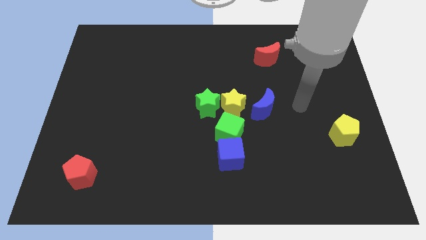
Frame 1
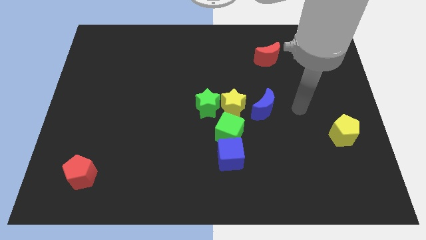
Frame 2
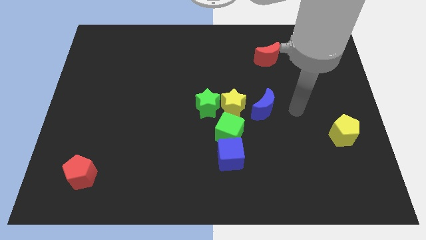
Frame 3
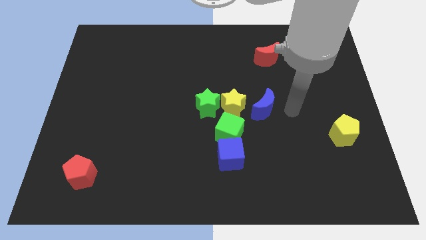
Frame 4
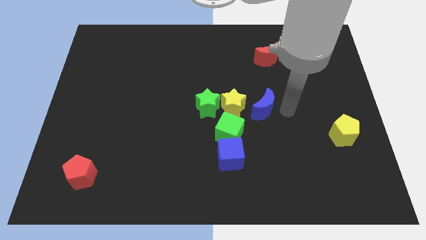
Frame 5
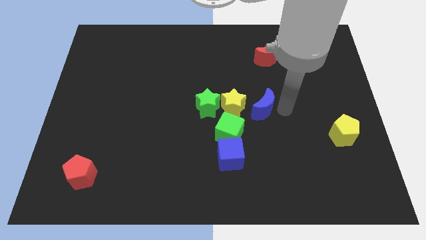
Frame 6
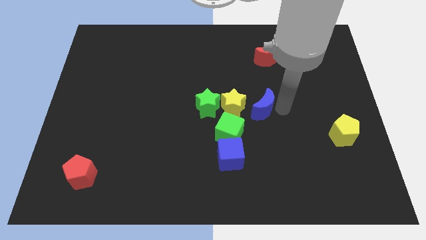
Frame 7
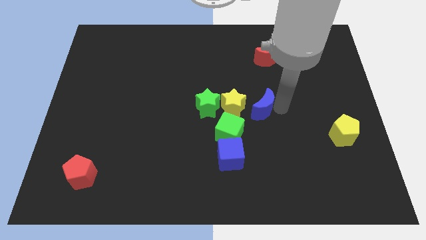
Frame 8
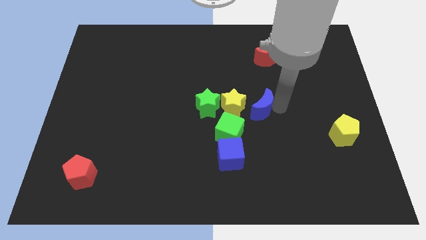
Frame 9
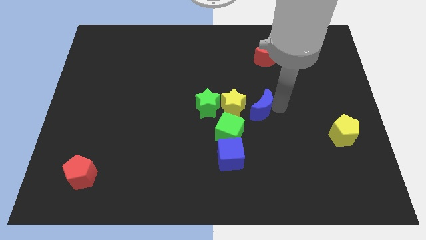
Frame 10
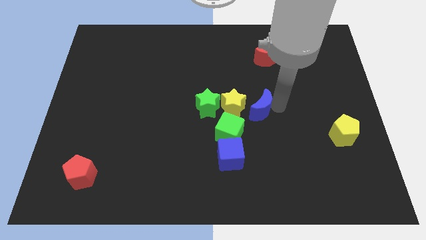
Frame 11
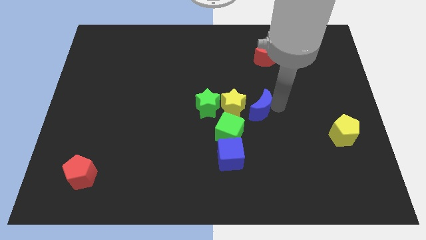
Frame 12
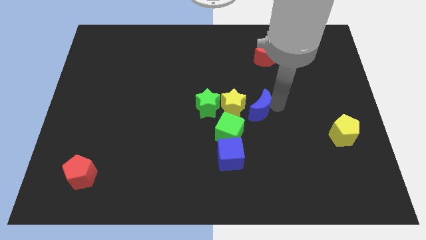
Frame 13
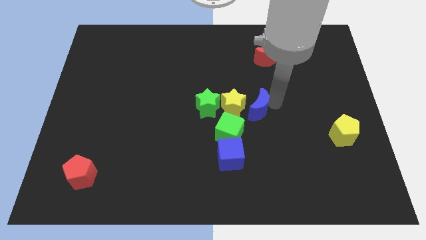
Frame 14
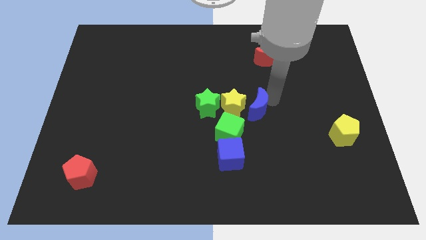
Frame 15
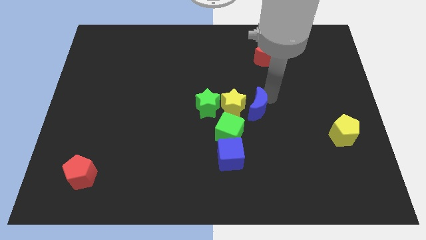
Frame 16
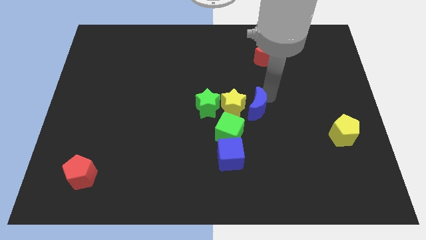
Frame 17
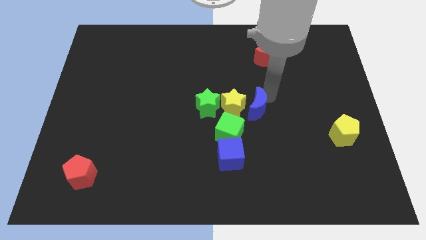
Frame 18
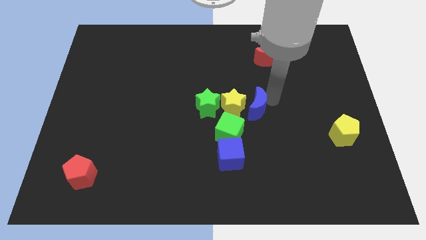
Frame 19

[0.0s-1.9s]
push the blue crescent slightly towards the yellow star

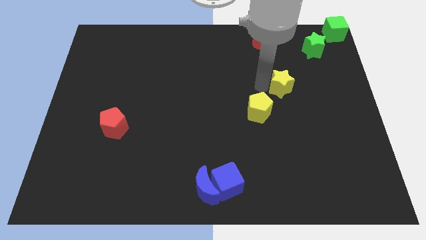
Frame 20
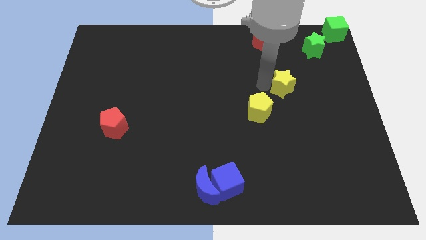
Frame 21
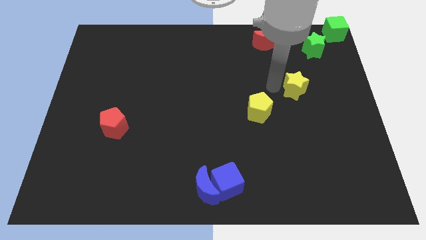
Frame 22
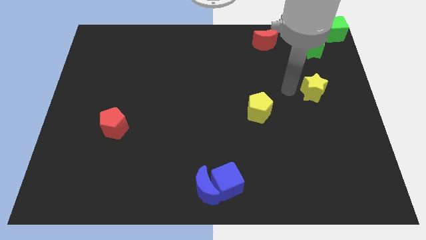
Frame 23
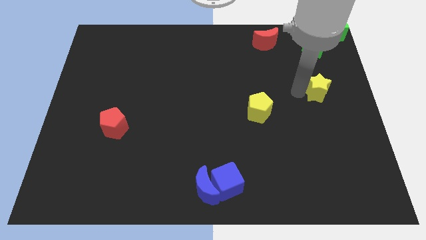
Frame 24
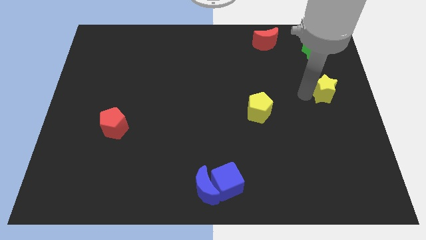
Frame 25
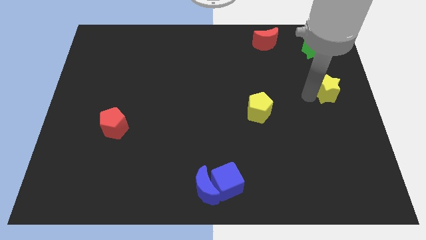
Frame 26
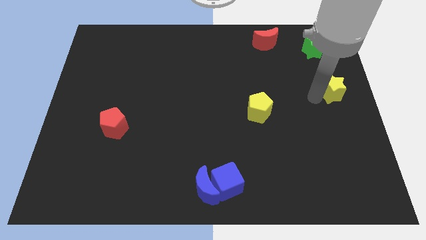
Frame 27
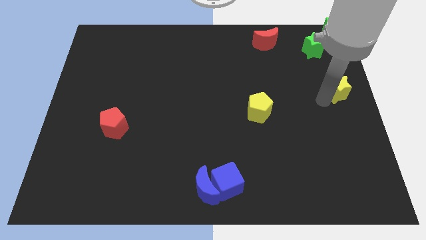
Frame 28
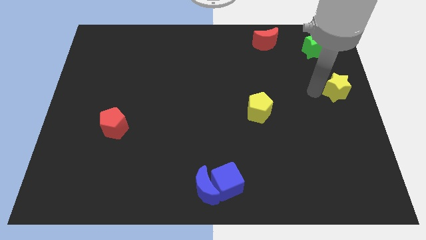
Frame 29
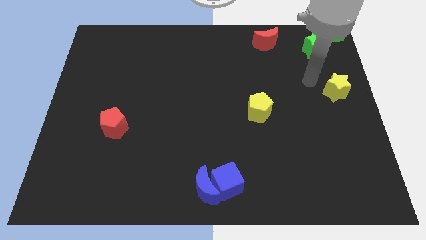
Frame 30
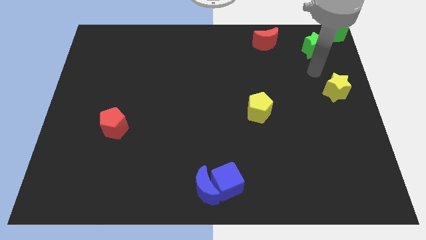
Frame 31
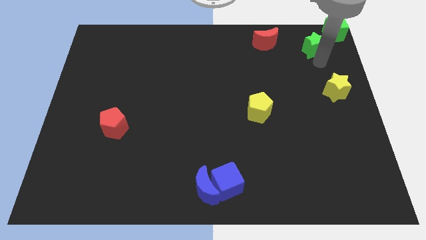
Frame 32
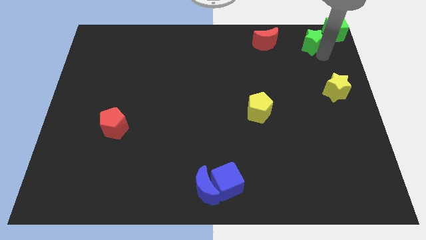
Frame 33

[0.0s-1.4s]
move the yellow star to the right center of the board

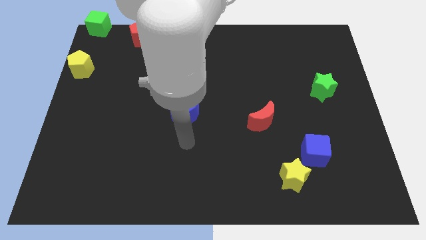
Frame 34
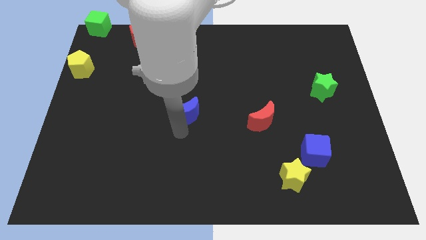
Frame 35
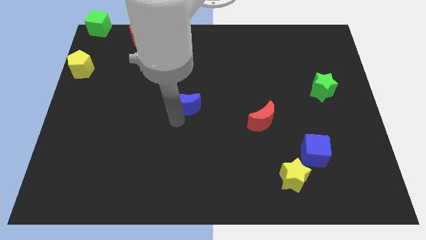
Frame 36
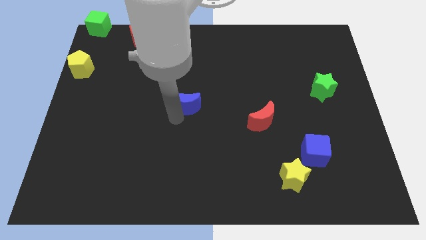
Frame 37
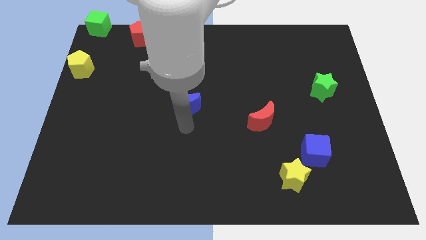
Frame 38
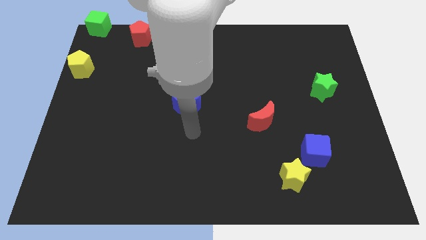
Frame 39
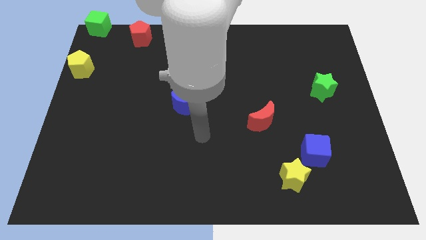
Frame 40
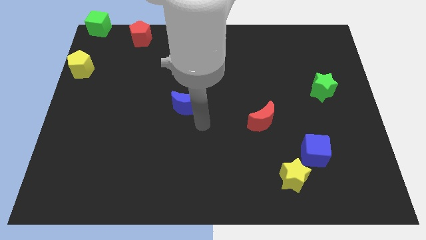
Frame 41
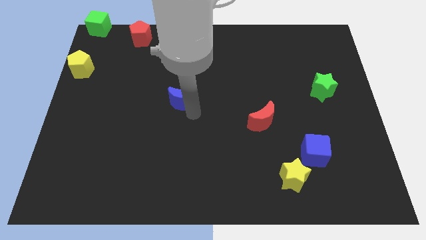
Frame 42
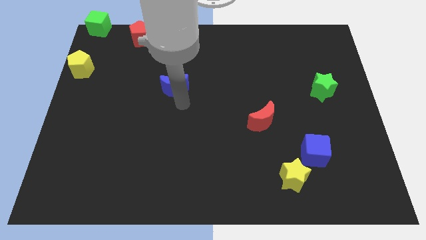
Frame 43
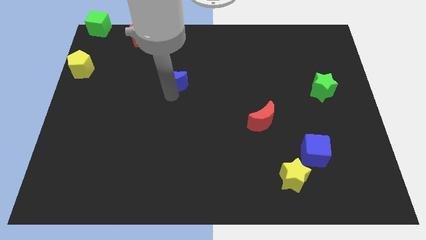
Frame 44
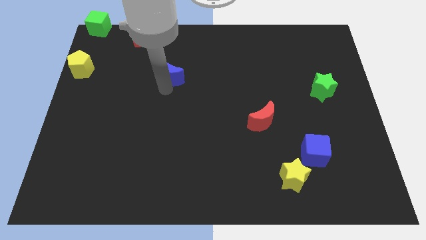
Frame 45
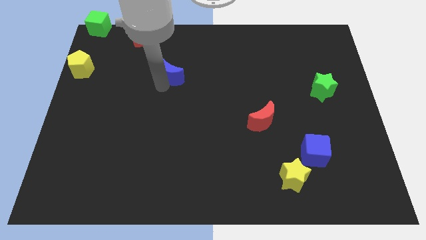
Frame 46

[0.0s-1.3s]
push the blue moon upwards

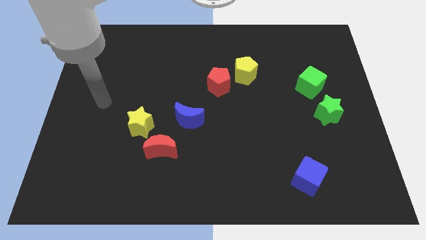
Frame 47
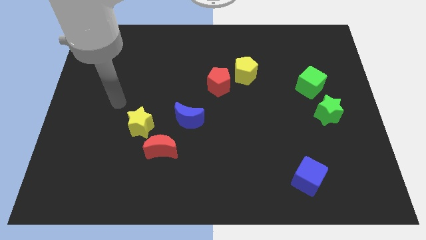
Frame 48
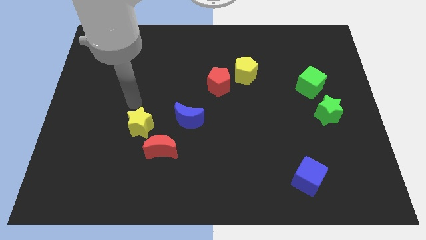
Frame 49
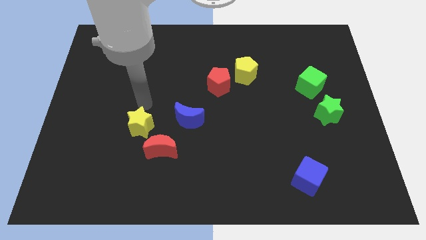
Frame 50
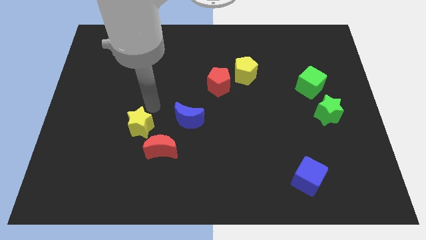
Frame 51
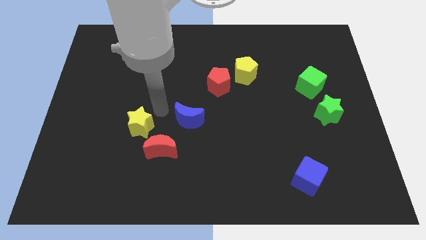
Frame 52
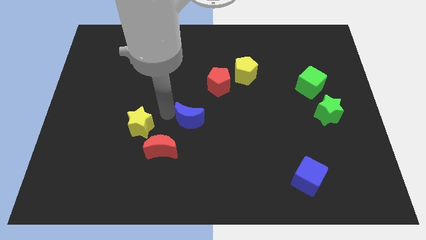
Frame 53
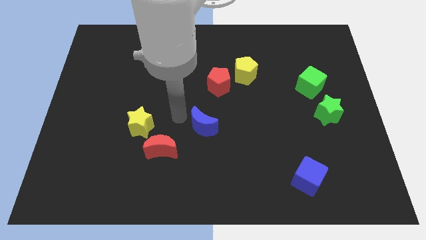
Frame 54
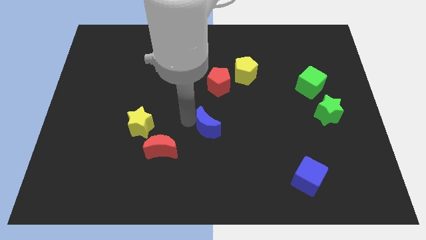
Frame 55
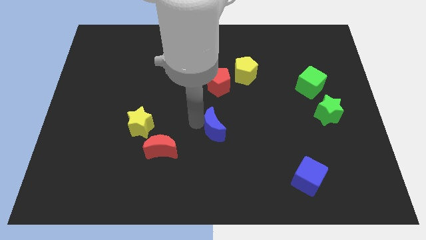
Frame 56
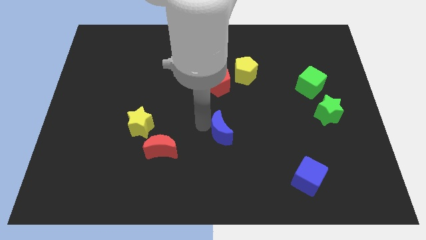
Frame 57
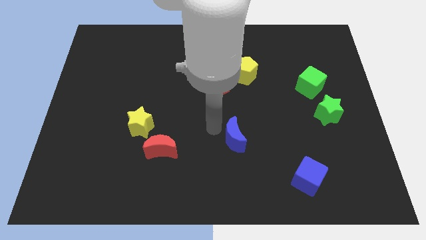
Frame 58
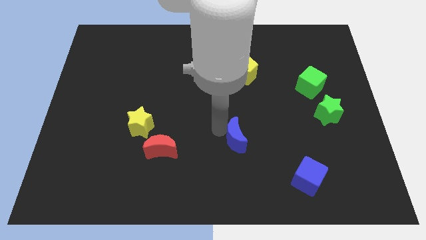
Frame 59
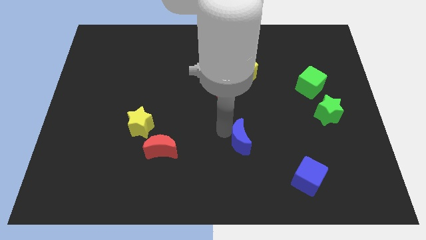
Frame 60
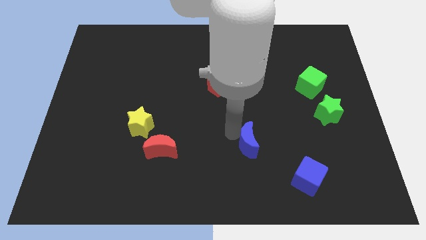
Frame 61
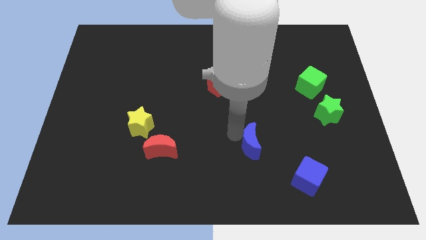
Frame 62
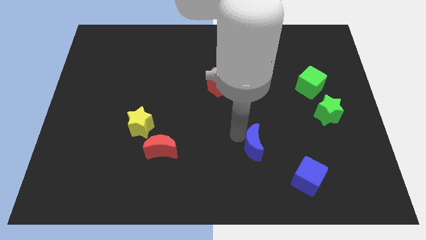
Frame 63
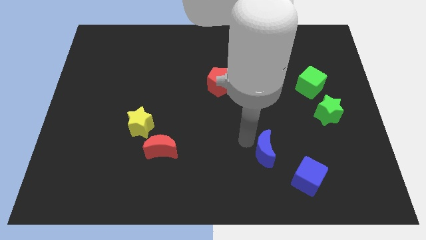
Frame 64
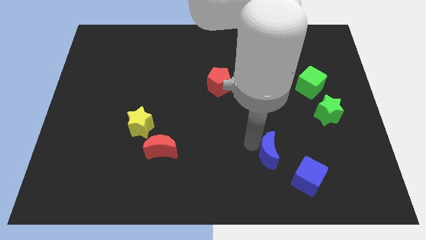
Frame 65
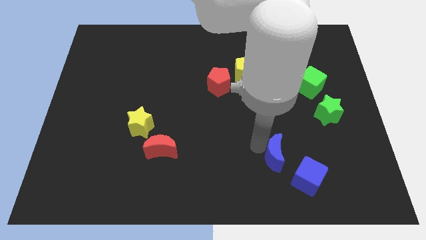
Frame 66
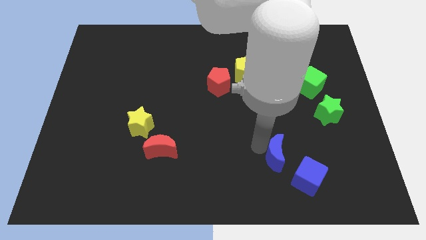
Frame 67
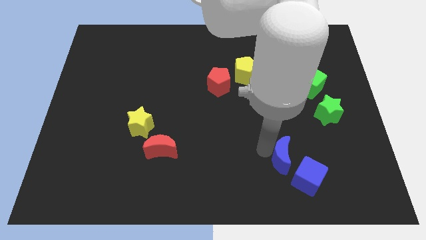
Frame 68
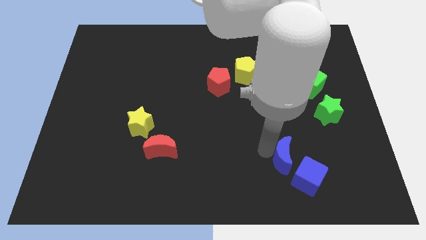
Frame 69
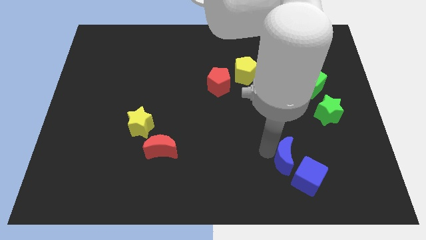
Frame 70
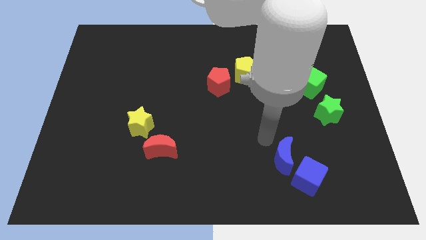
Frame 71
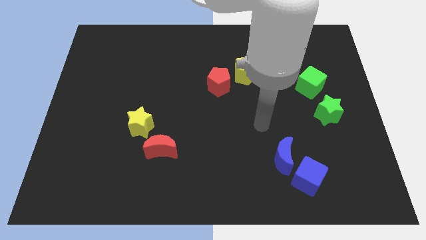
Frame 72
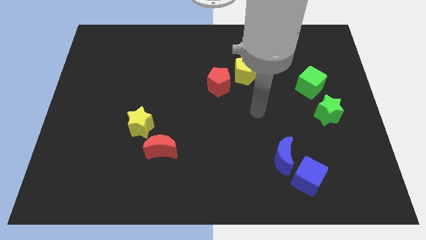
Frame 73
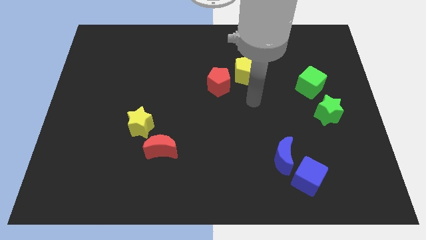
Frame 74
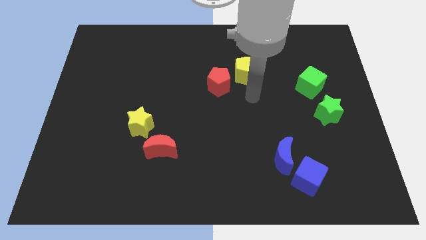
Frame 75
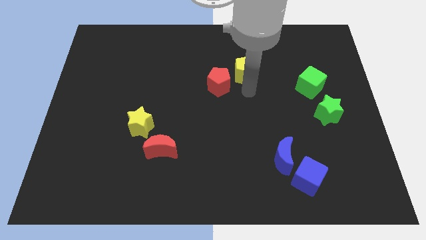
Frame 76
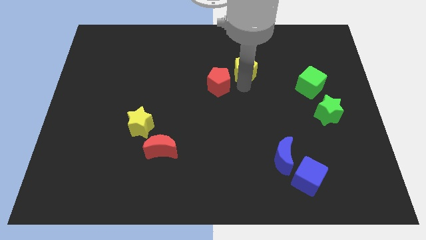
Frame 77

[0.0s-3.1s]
push the blue moon towards the blue cube

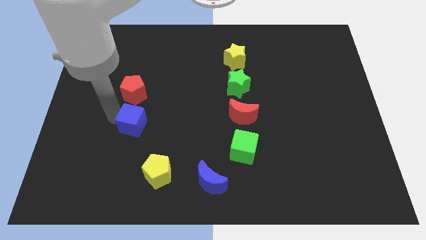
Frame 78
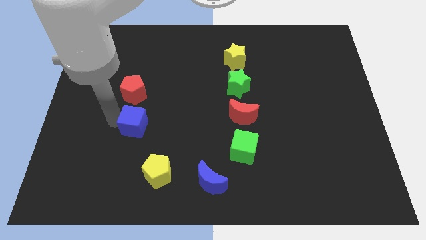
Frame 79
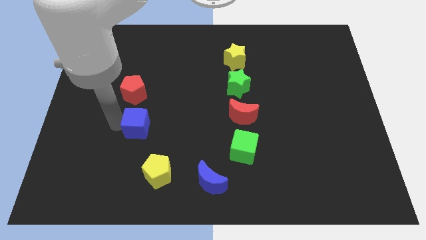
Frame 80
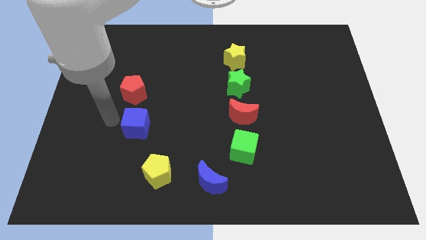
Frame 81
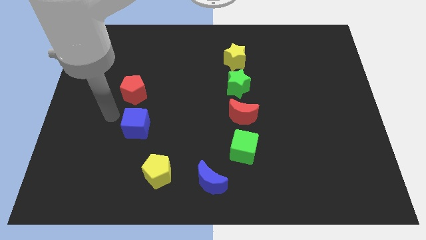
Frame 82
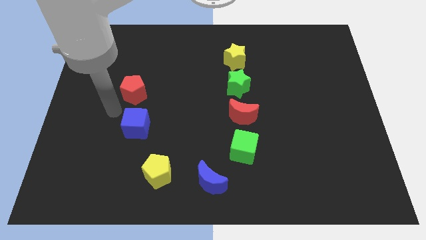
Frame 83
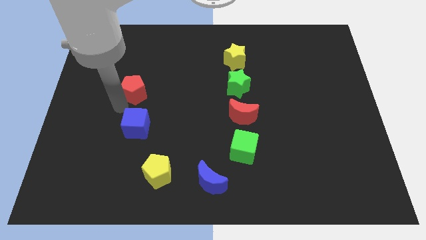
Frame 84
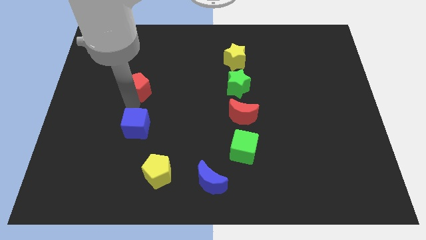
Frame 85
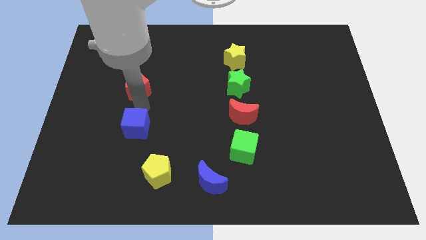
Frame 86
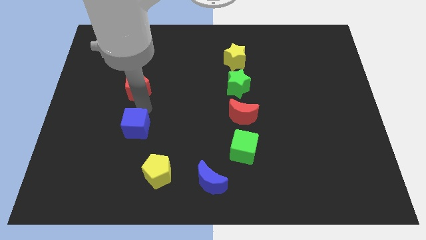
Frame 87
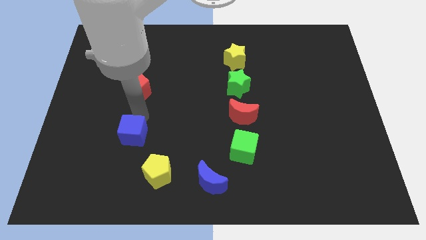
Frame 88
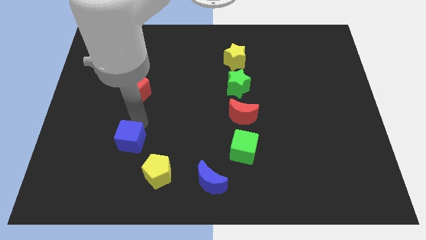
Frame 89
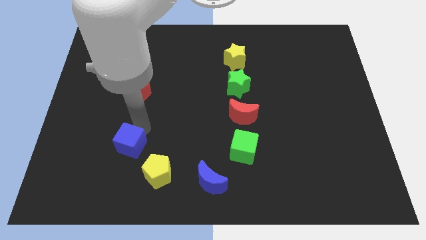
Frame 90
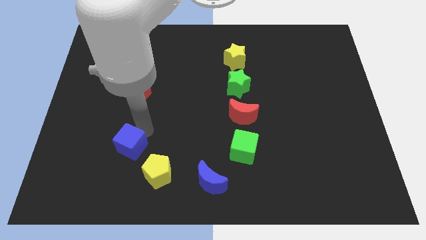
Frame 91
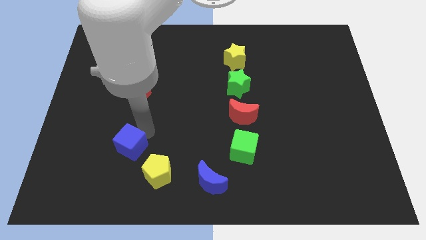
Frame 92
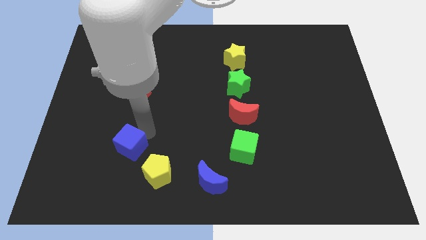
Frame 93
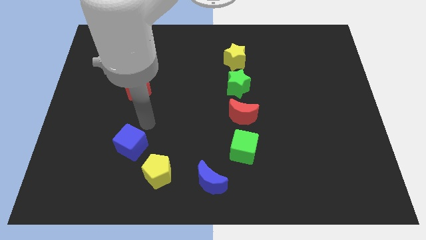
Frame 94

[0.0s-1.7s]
move the blue cube near to the yellow pentagon
